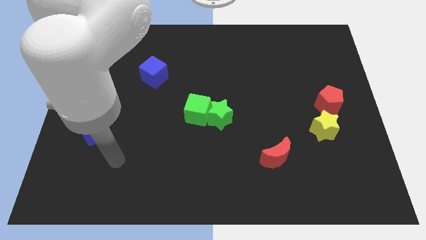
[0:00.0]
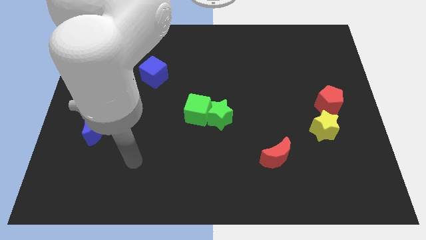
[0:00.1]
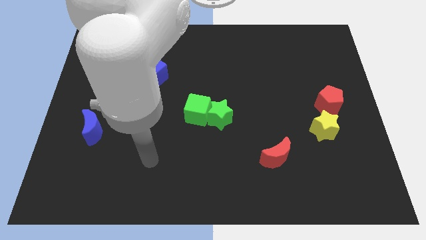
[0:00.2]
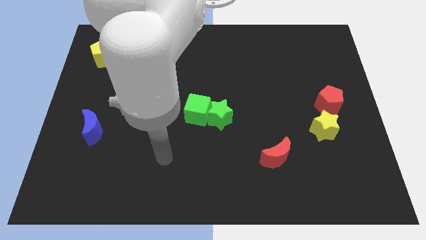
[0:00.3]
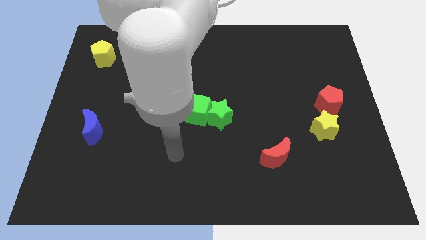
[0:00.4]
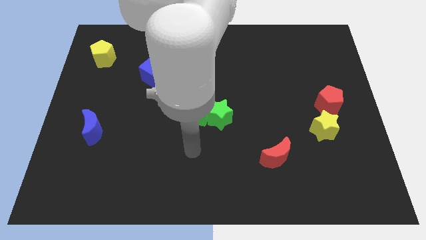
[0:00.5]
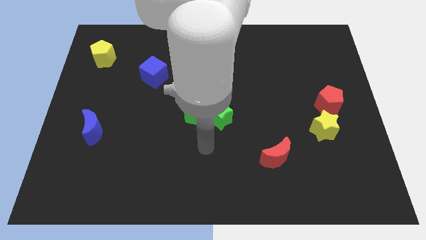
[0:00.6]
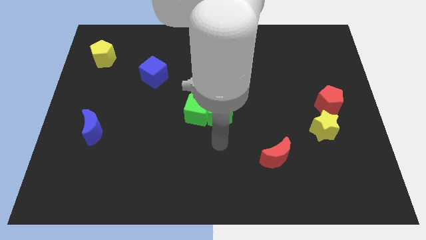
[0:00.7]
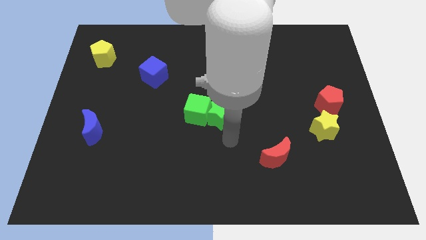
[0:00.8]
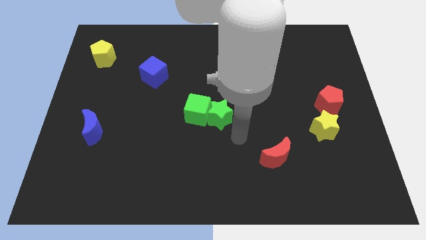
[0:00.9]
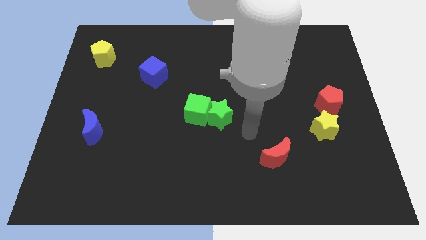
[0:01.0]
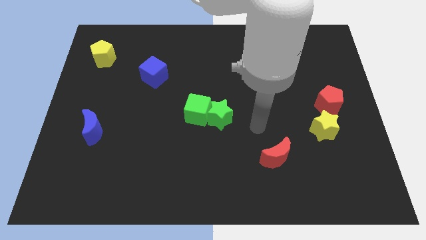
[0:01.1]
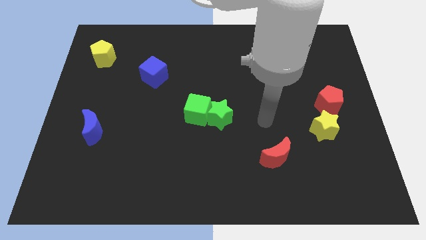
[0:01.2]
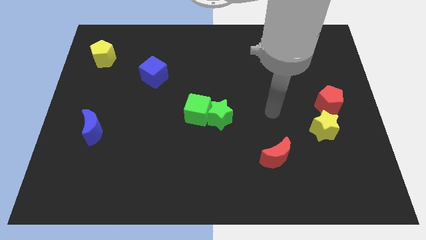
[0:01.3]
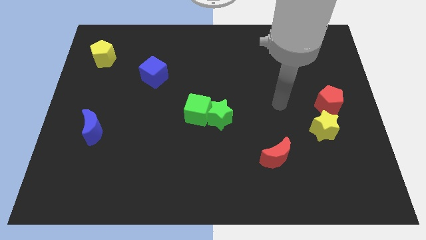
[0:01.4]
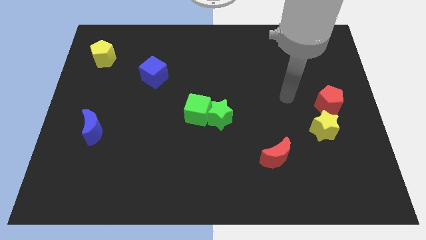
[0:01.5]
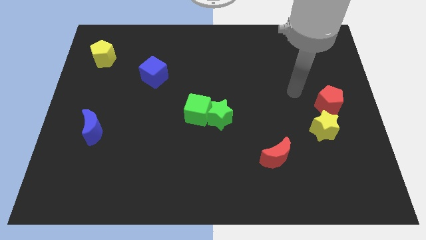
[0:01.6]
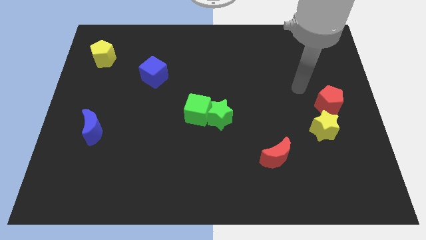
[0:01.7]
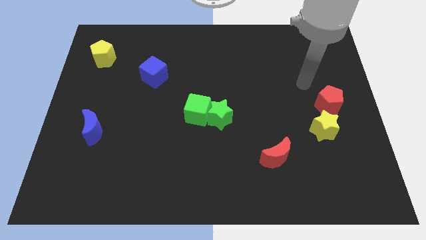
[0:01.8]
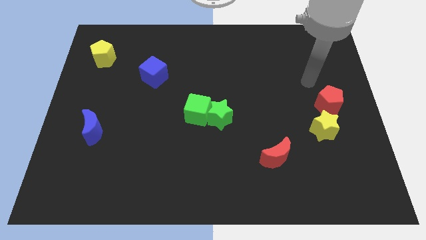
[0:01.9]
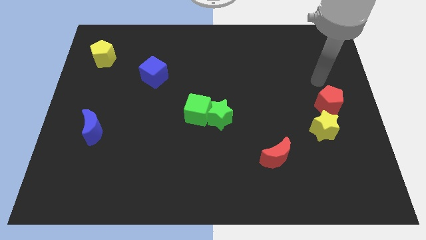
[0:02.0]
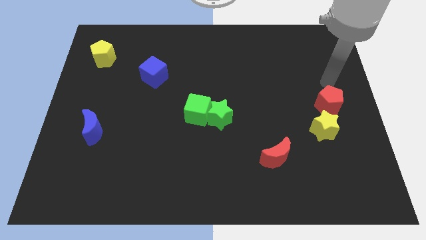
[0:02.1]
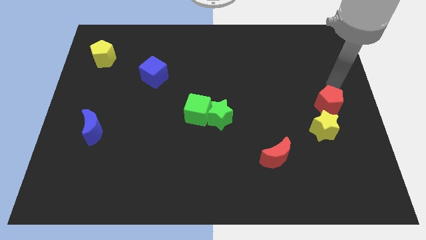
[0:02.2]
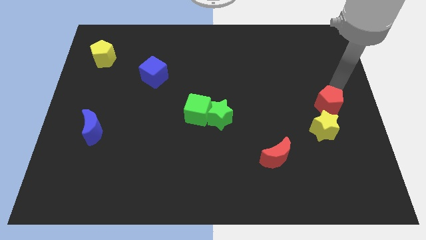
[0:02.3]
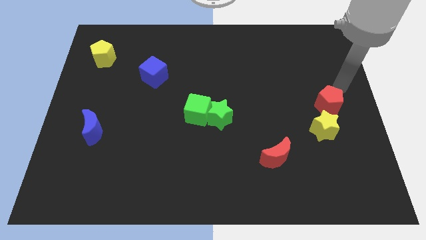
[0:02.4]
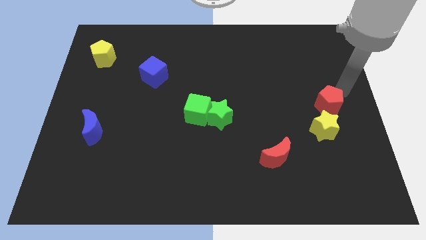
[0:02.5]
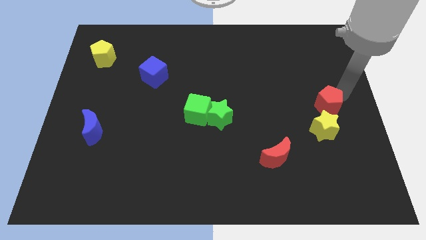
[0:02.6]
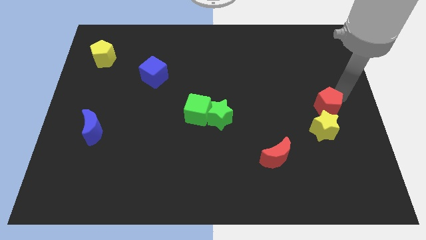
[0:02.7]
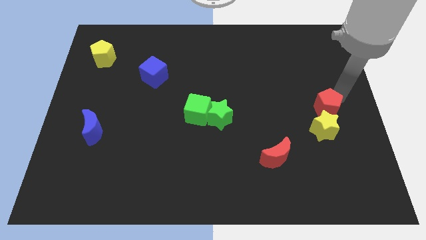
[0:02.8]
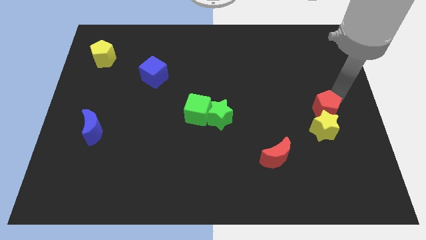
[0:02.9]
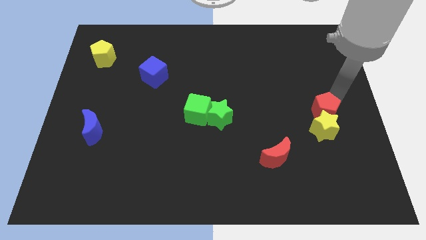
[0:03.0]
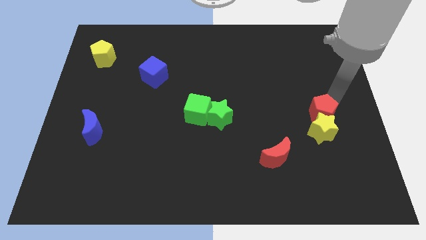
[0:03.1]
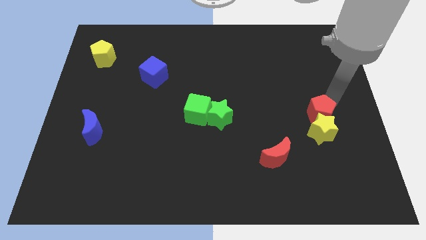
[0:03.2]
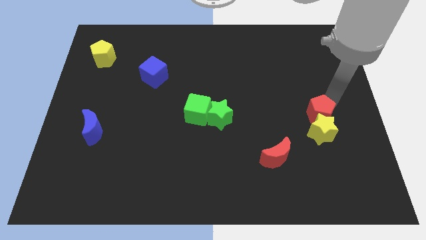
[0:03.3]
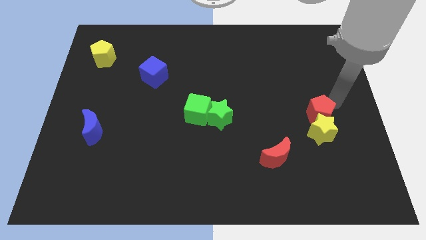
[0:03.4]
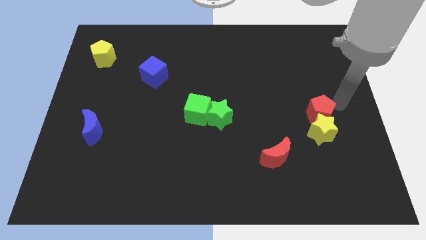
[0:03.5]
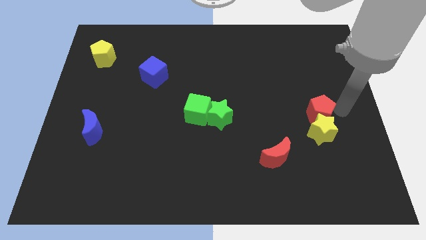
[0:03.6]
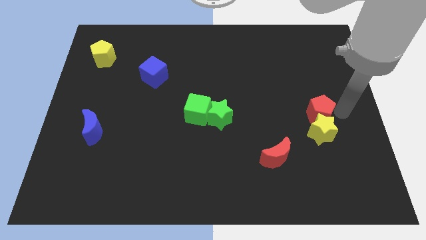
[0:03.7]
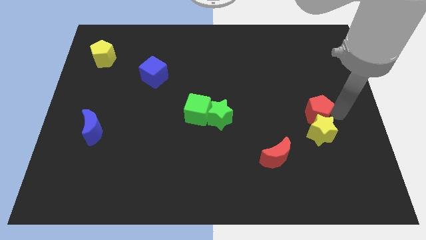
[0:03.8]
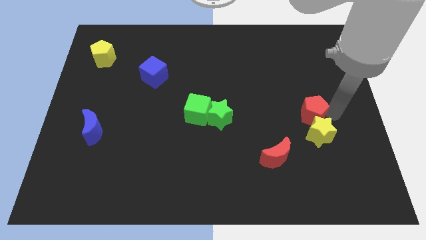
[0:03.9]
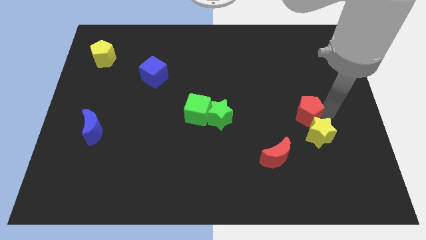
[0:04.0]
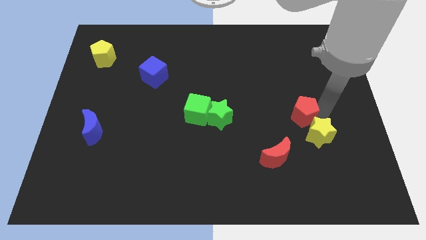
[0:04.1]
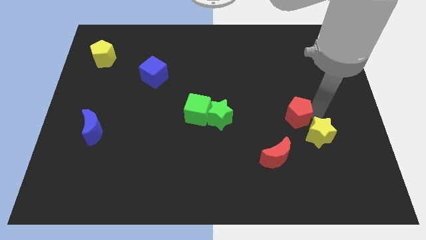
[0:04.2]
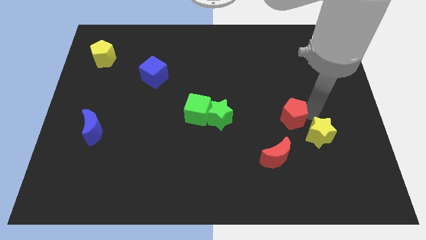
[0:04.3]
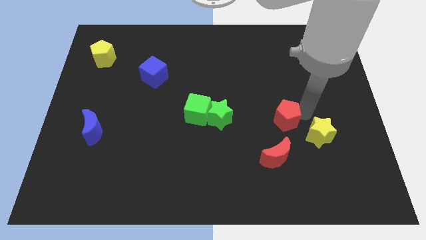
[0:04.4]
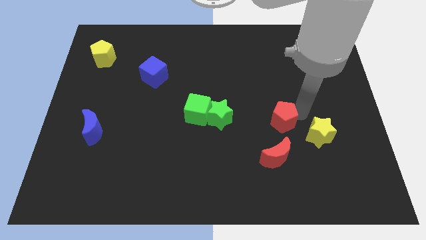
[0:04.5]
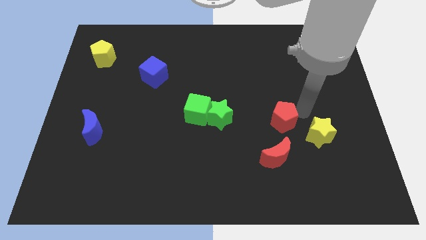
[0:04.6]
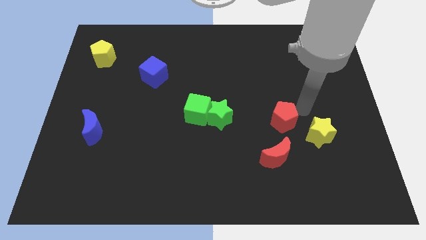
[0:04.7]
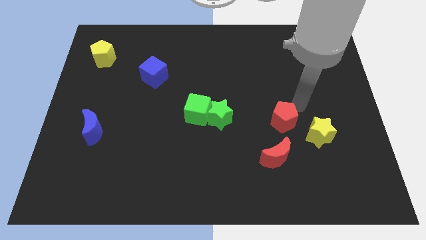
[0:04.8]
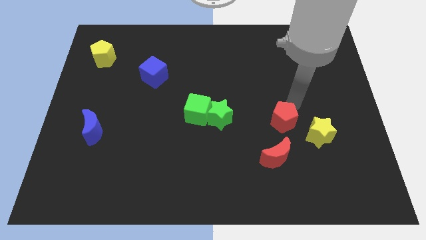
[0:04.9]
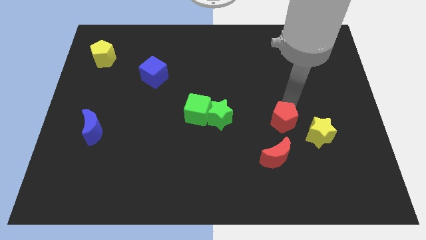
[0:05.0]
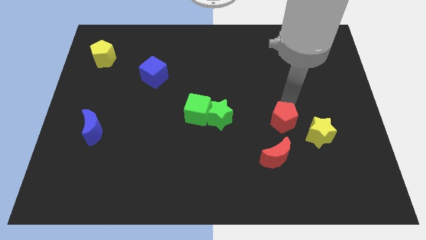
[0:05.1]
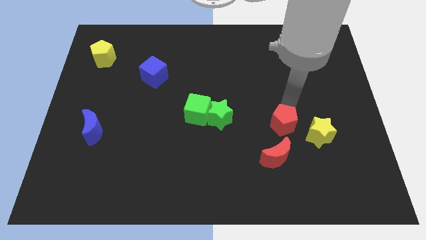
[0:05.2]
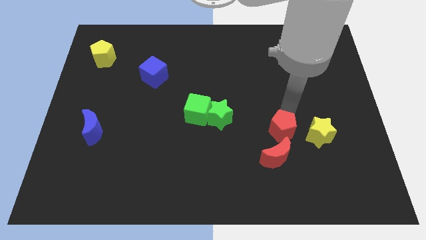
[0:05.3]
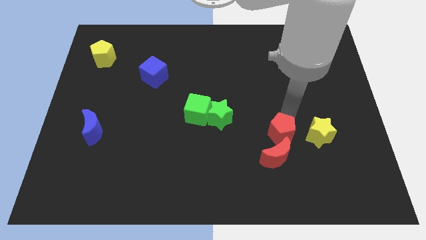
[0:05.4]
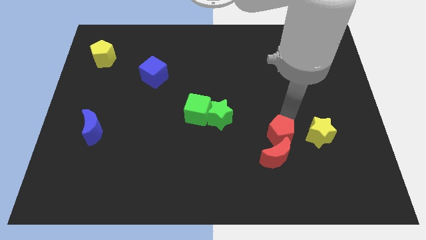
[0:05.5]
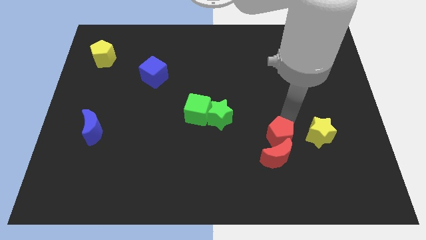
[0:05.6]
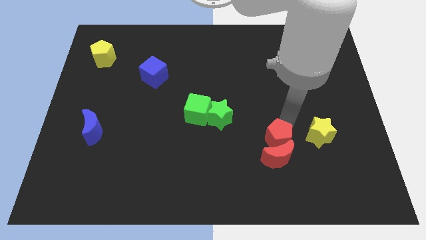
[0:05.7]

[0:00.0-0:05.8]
move the red pentagon close to the red moon

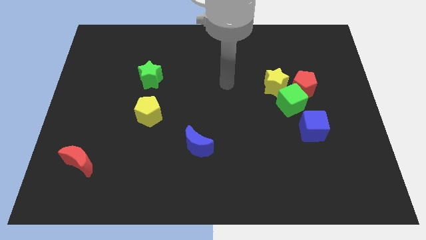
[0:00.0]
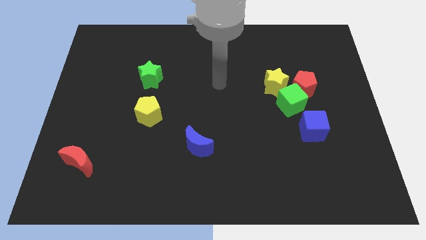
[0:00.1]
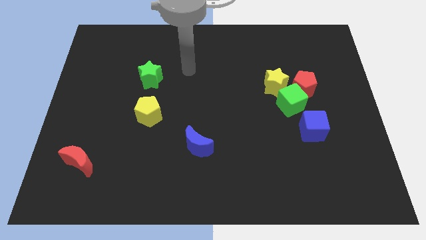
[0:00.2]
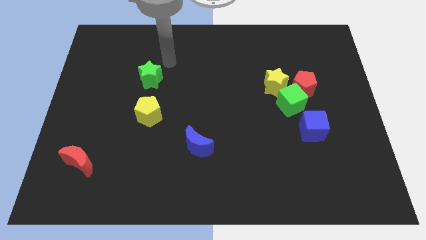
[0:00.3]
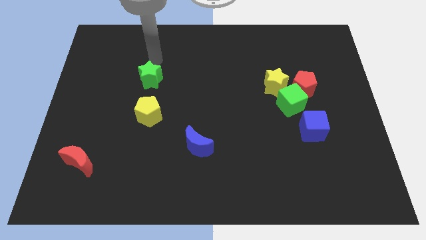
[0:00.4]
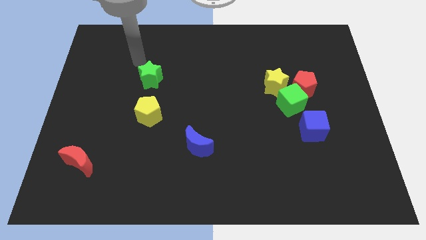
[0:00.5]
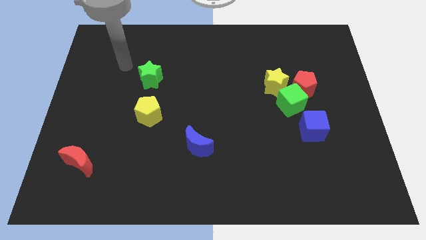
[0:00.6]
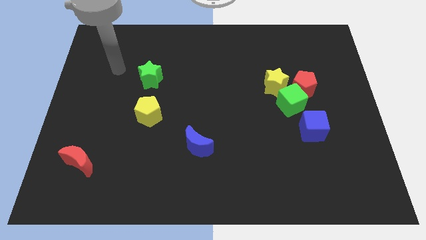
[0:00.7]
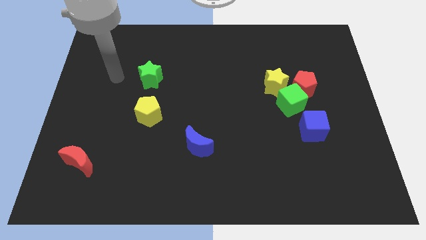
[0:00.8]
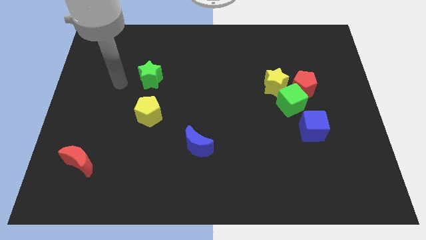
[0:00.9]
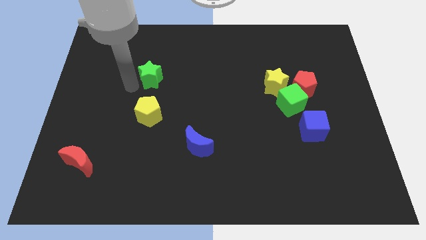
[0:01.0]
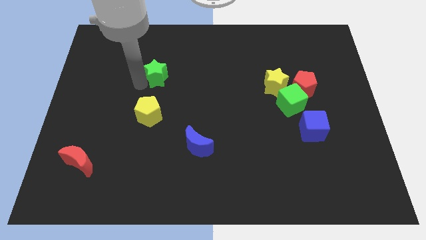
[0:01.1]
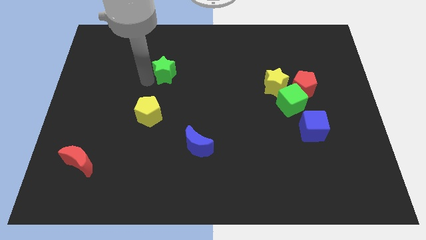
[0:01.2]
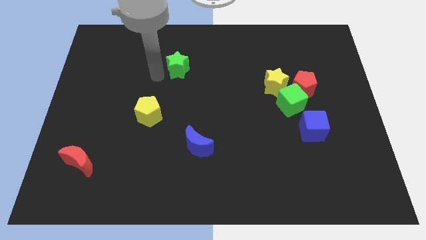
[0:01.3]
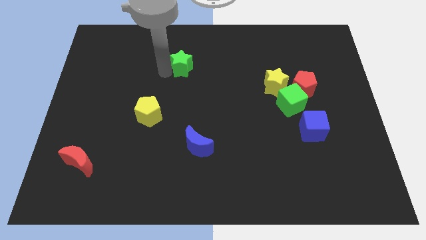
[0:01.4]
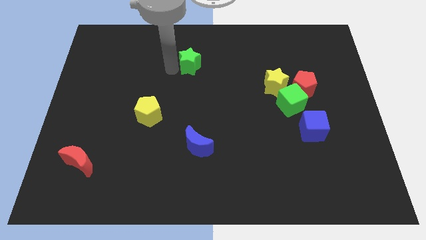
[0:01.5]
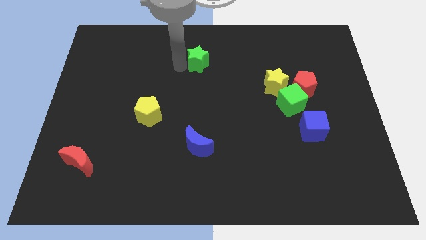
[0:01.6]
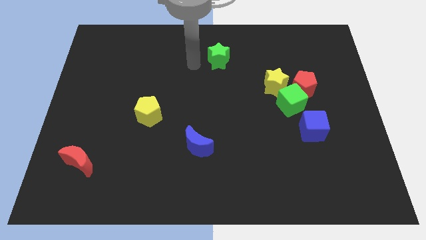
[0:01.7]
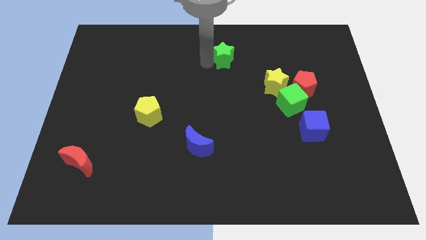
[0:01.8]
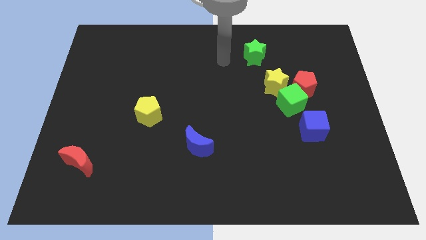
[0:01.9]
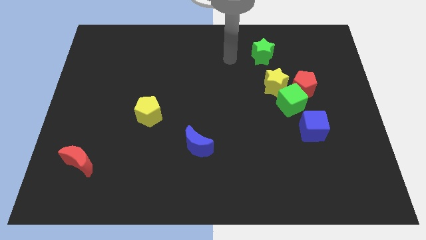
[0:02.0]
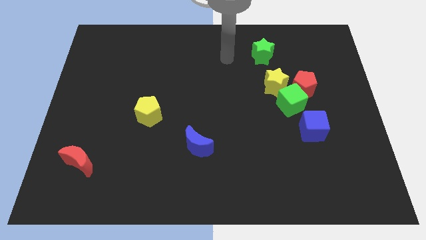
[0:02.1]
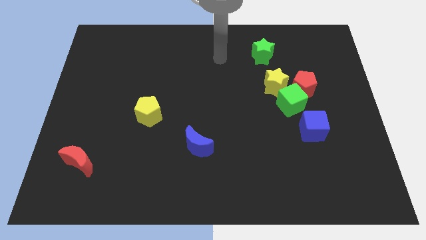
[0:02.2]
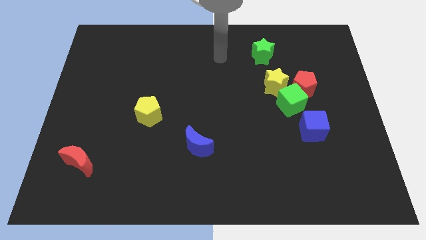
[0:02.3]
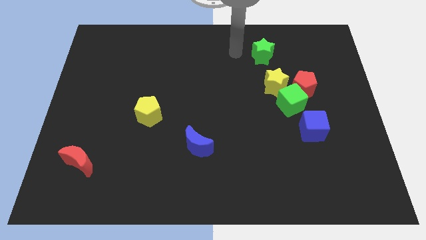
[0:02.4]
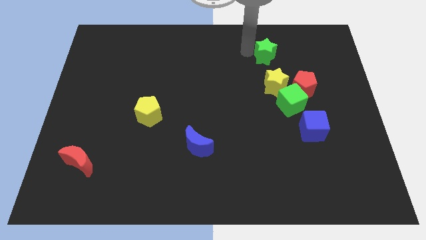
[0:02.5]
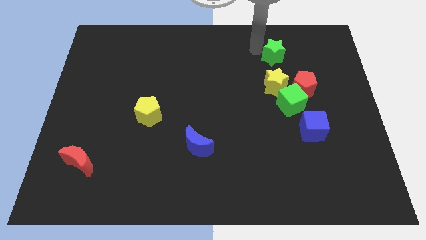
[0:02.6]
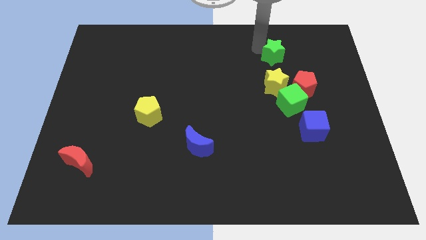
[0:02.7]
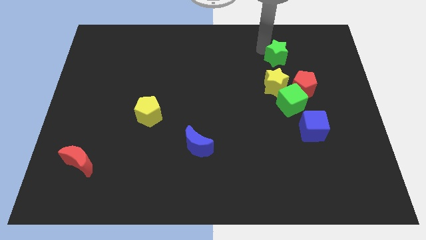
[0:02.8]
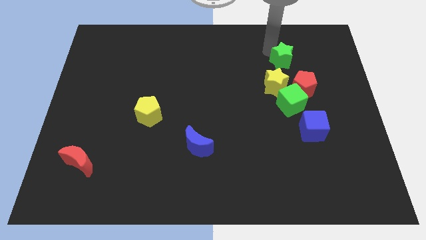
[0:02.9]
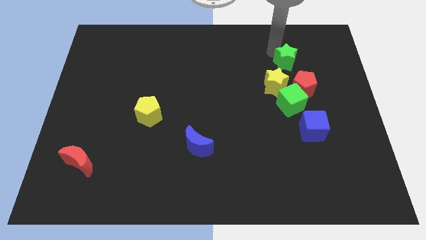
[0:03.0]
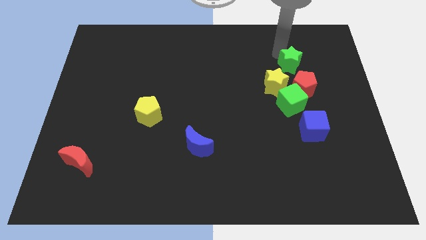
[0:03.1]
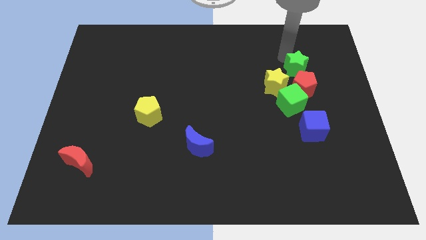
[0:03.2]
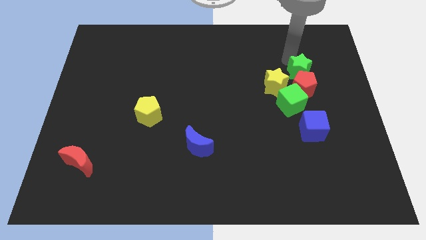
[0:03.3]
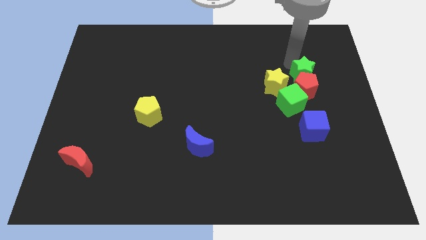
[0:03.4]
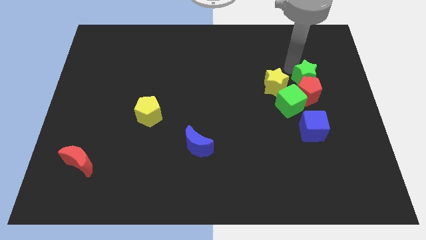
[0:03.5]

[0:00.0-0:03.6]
put the green star to the red pentagon
